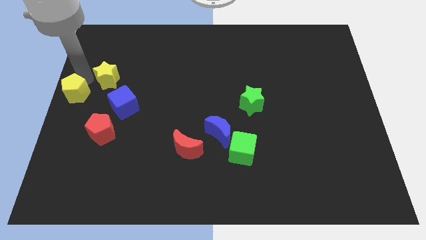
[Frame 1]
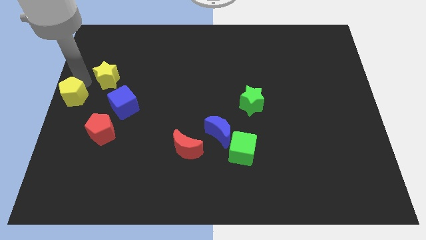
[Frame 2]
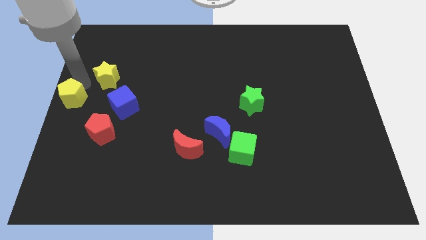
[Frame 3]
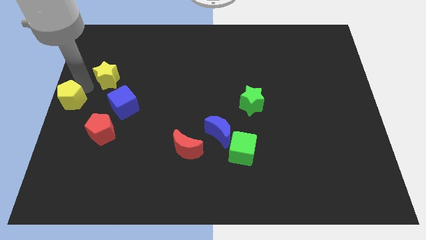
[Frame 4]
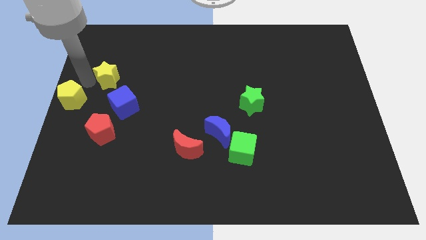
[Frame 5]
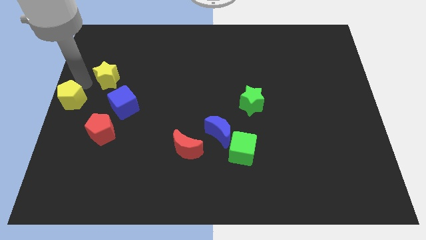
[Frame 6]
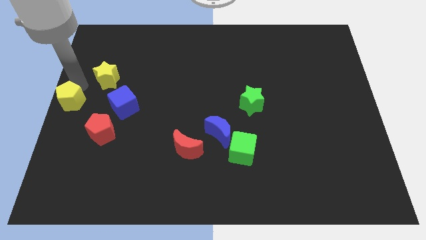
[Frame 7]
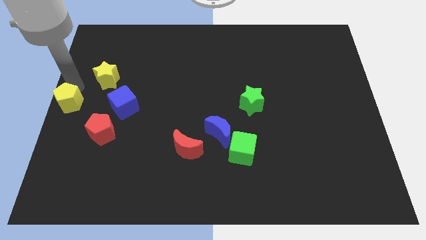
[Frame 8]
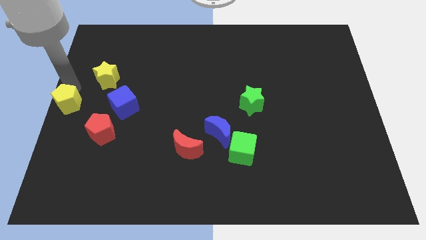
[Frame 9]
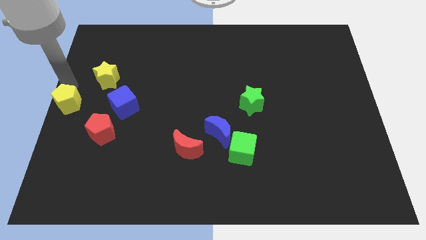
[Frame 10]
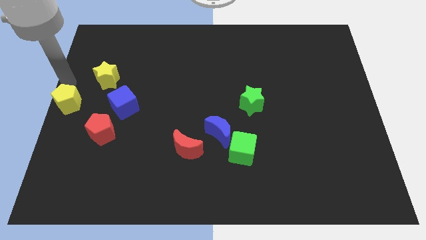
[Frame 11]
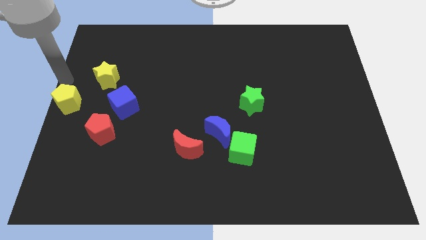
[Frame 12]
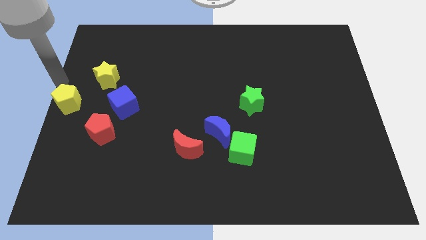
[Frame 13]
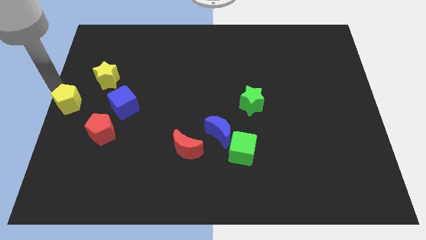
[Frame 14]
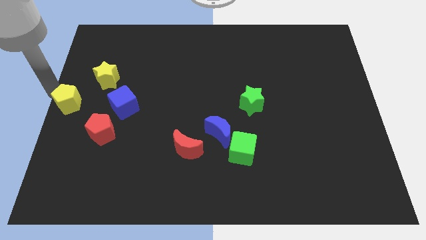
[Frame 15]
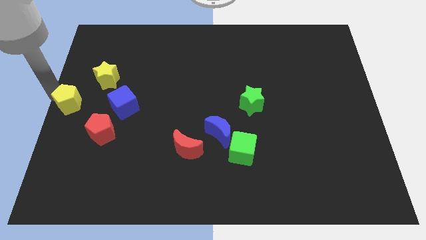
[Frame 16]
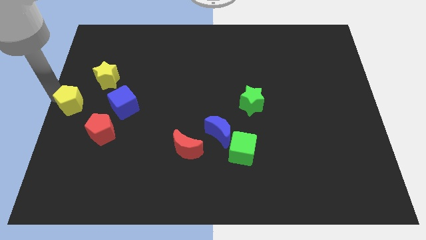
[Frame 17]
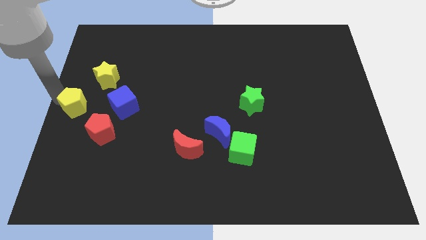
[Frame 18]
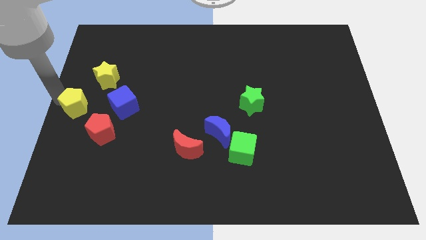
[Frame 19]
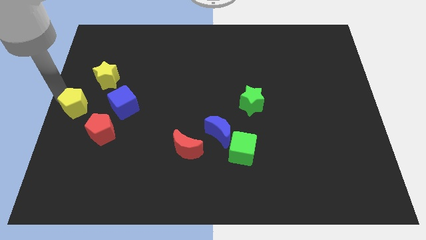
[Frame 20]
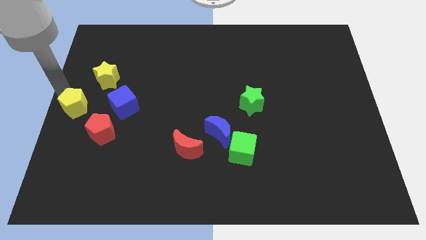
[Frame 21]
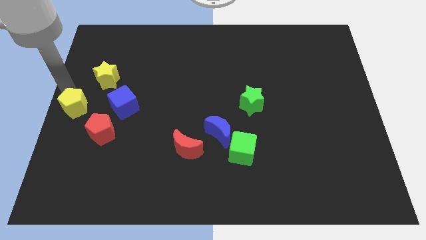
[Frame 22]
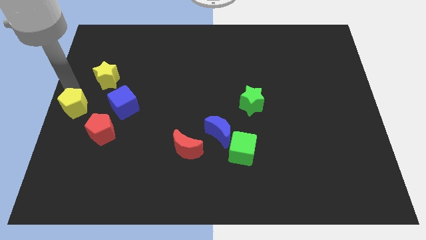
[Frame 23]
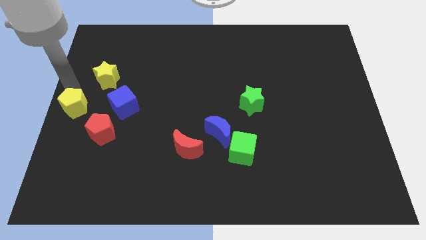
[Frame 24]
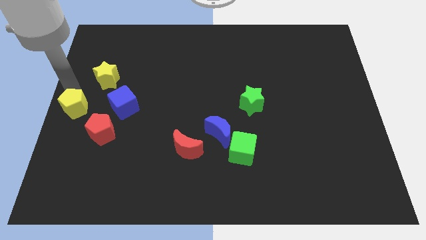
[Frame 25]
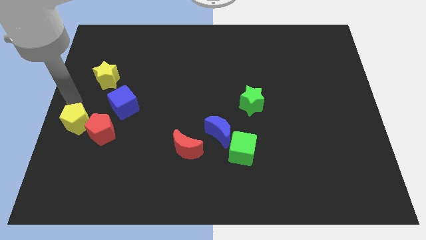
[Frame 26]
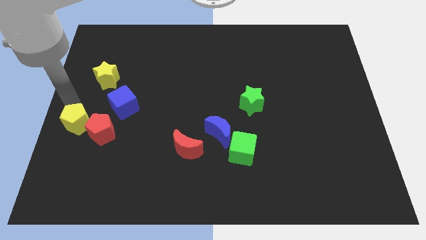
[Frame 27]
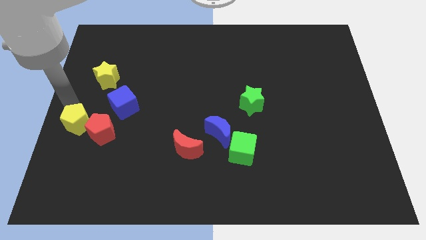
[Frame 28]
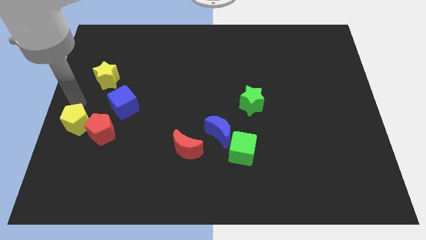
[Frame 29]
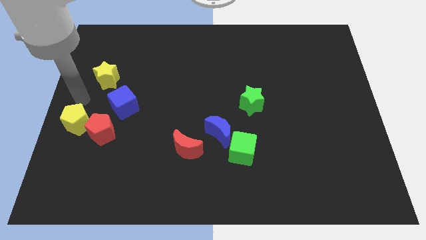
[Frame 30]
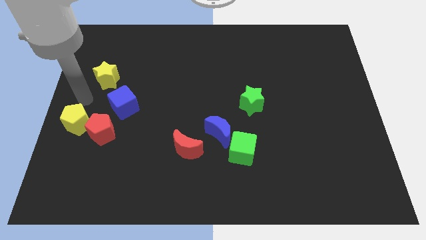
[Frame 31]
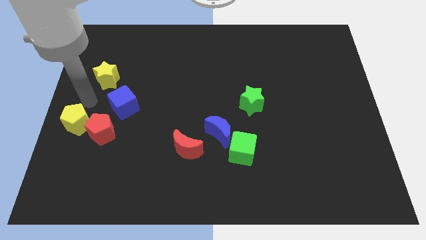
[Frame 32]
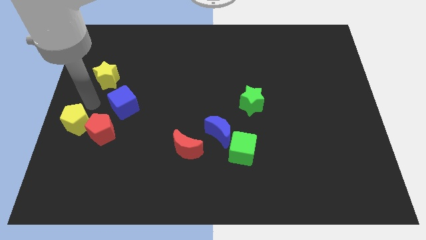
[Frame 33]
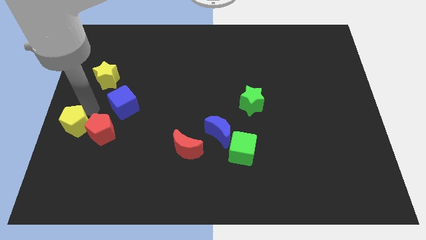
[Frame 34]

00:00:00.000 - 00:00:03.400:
move the yellow pentagon to the left of the red pentagon

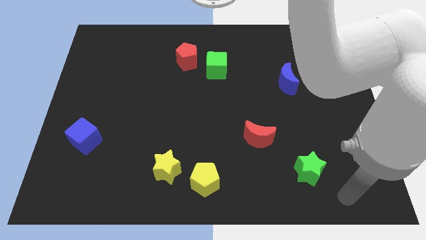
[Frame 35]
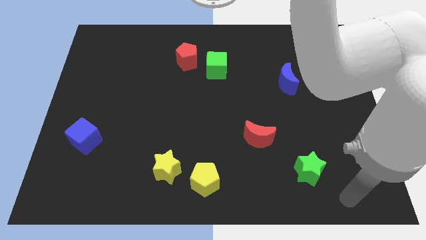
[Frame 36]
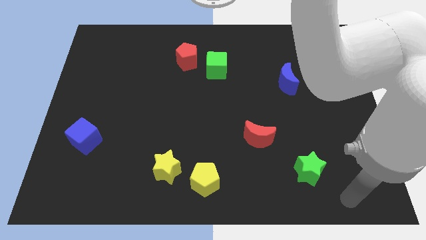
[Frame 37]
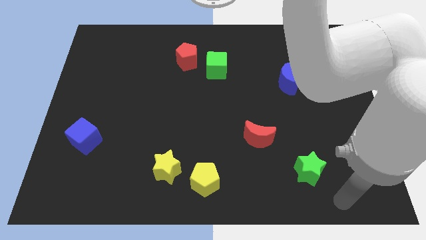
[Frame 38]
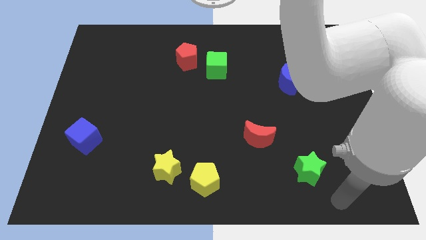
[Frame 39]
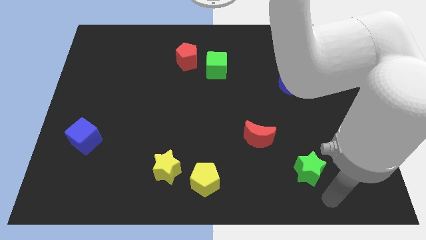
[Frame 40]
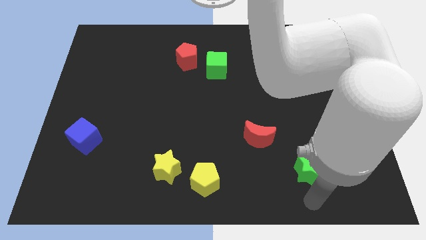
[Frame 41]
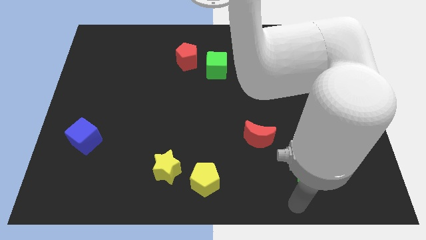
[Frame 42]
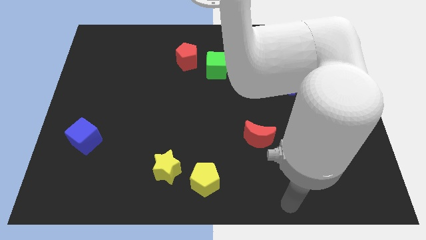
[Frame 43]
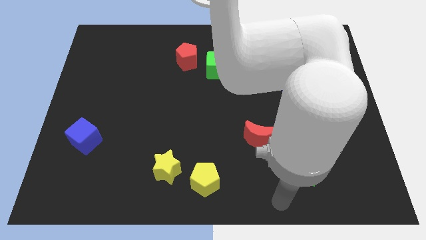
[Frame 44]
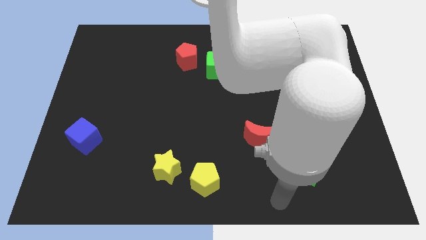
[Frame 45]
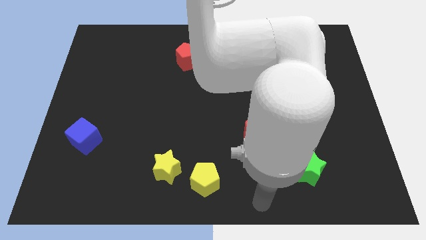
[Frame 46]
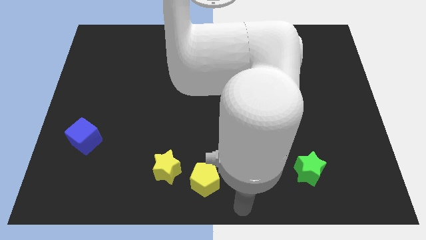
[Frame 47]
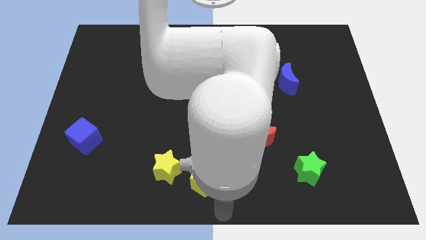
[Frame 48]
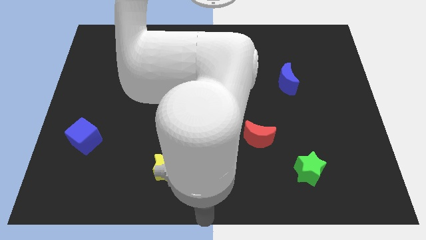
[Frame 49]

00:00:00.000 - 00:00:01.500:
point your arm at the bottom center of the board

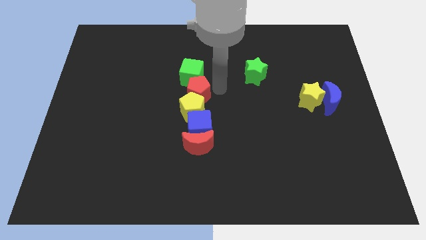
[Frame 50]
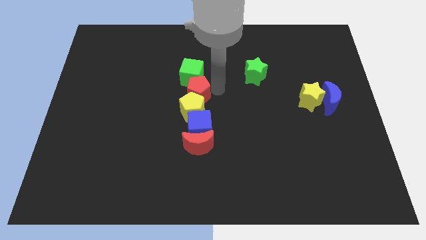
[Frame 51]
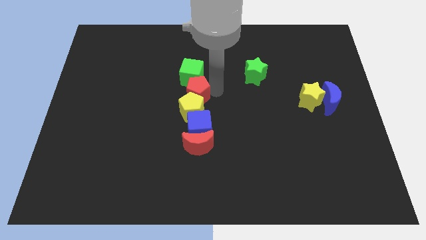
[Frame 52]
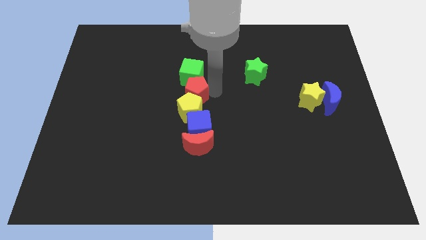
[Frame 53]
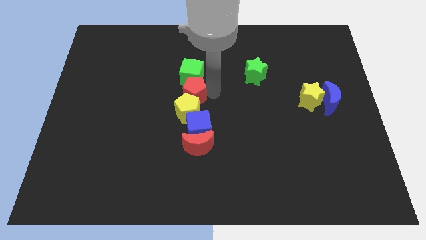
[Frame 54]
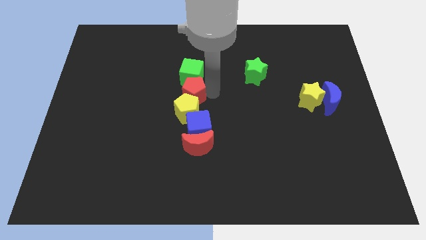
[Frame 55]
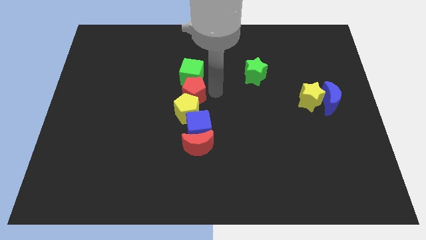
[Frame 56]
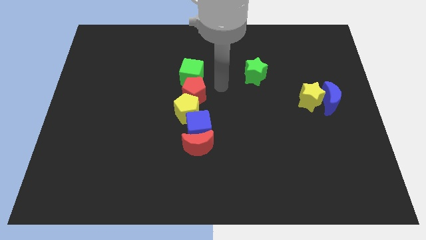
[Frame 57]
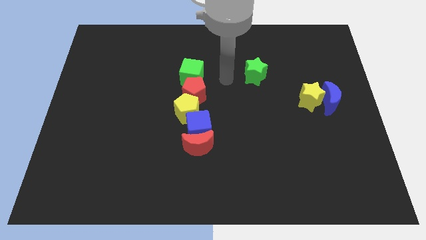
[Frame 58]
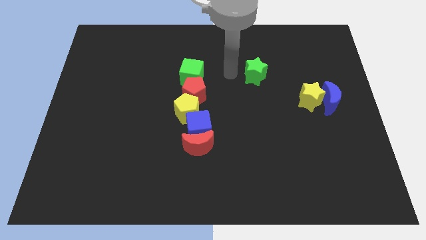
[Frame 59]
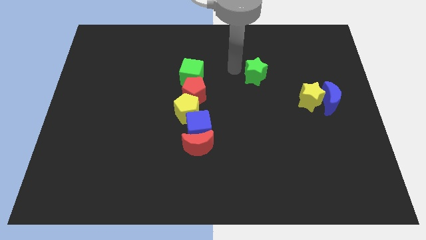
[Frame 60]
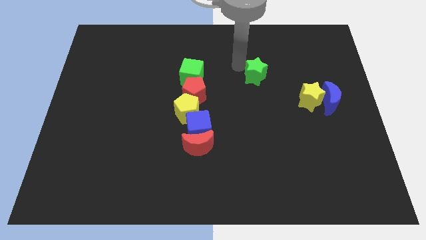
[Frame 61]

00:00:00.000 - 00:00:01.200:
adjust the red pentagon to the bottom of the green cube

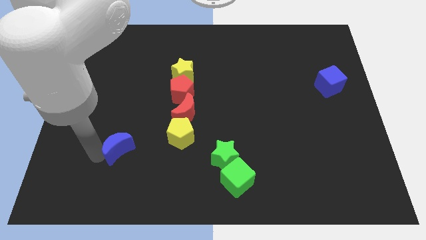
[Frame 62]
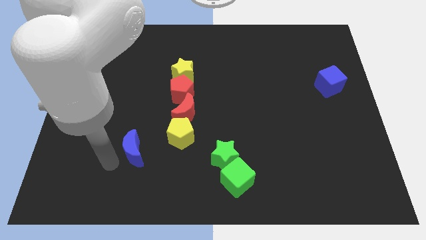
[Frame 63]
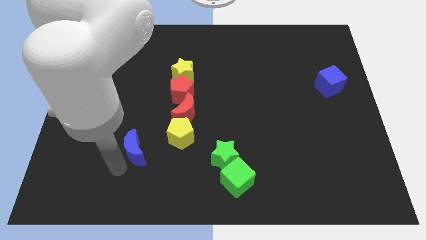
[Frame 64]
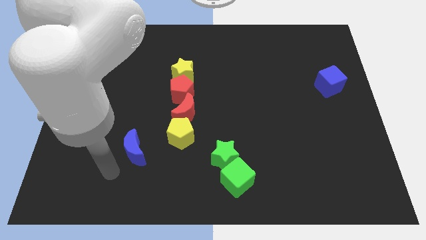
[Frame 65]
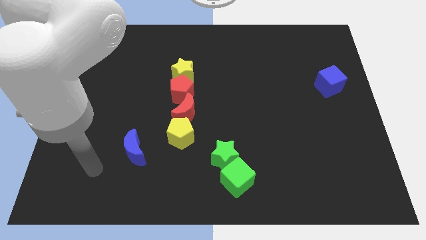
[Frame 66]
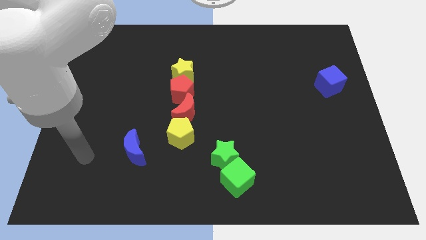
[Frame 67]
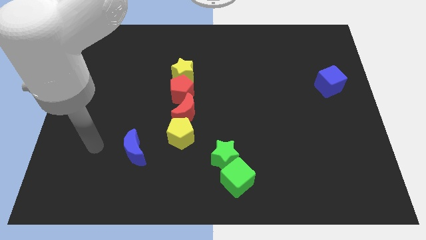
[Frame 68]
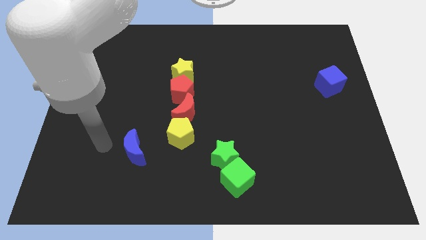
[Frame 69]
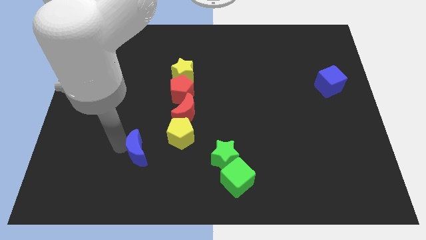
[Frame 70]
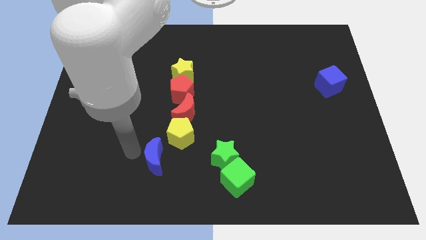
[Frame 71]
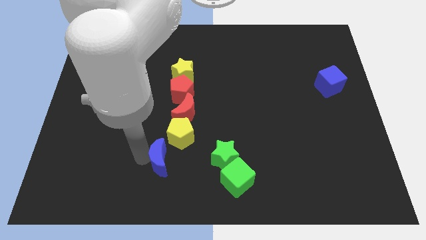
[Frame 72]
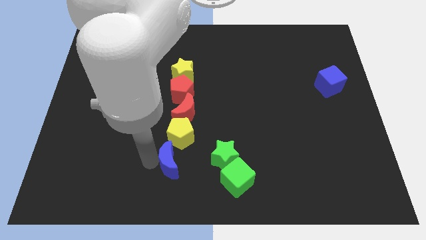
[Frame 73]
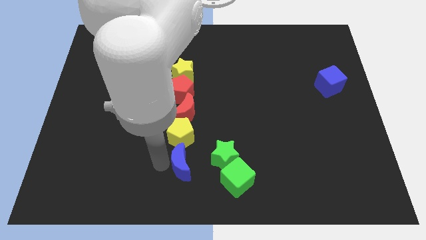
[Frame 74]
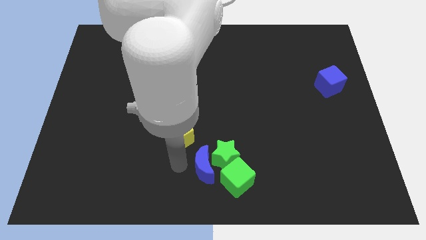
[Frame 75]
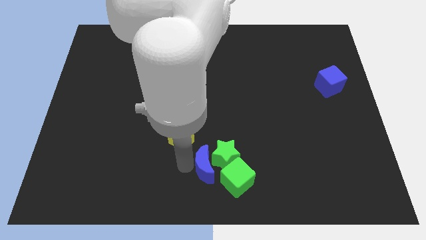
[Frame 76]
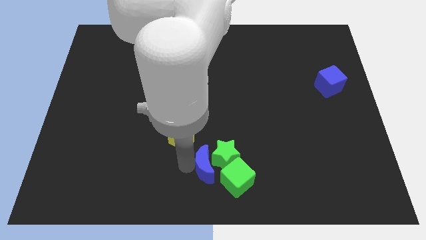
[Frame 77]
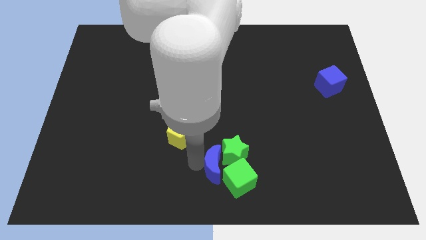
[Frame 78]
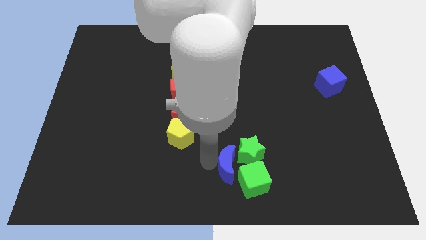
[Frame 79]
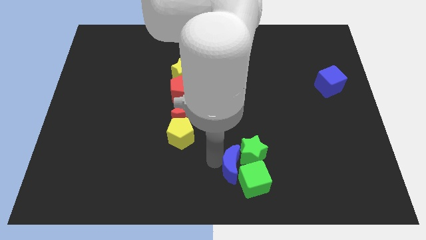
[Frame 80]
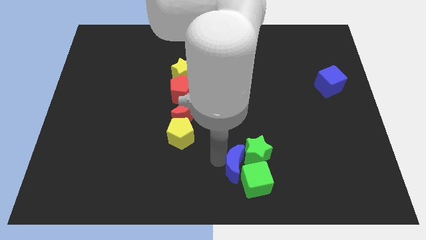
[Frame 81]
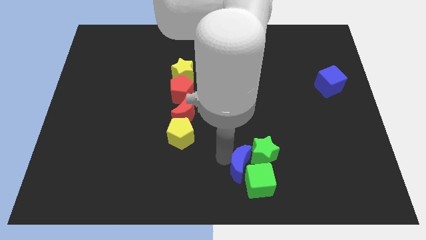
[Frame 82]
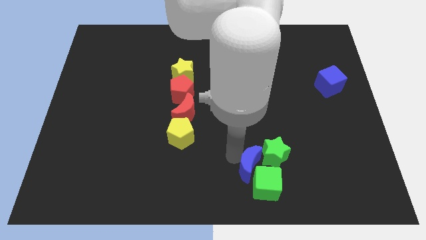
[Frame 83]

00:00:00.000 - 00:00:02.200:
push blue moon into green blocks

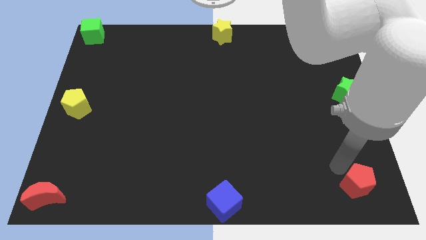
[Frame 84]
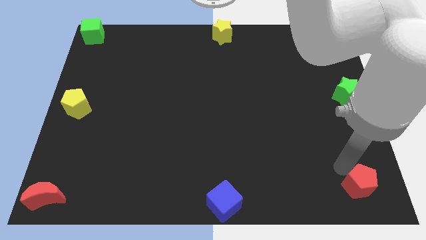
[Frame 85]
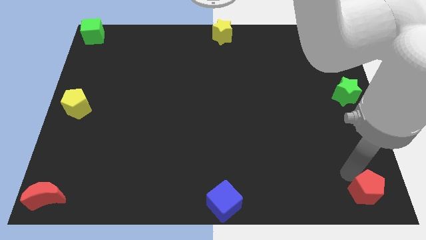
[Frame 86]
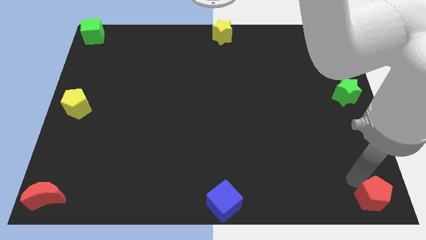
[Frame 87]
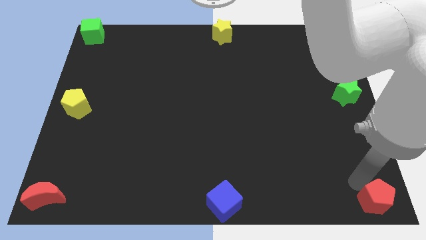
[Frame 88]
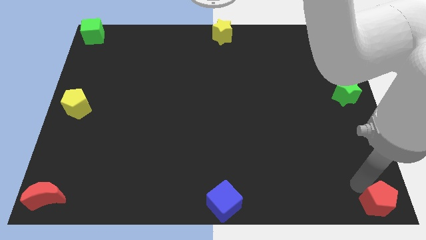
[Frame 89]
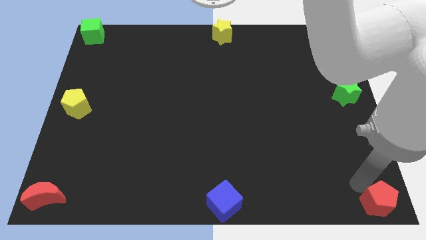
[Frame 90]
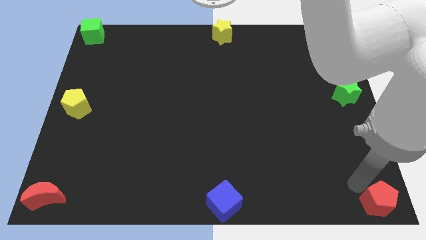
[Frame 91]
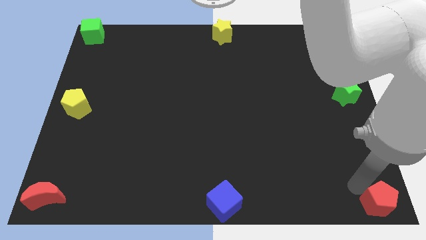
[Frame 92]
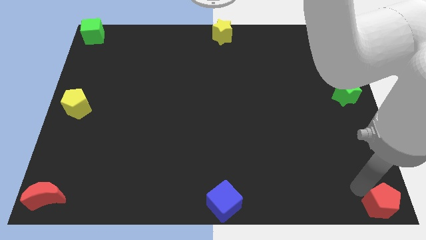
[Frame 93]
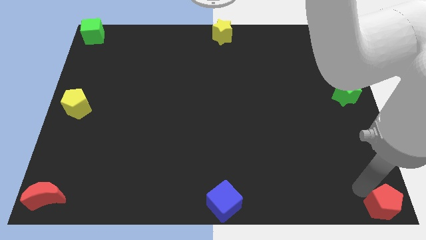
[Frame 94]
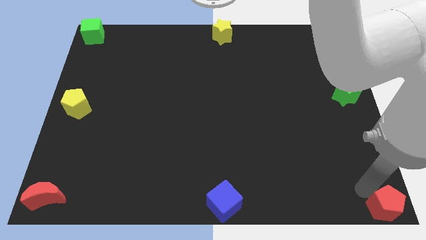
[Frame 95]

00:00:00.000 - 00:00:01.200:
move the red pentagon to the bottom right of the board
